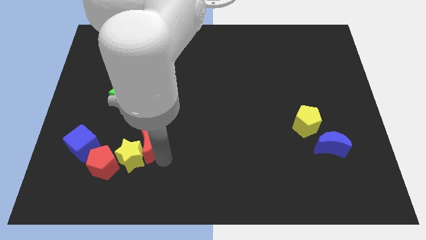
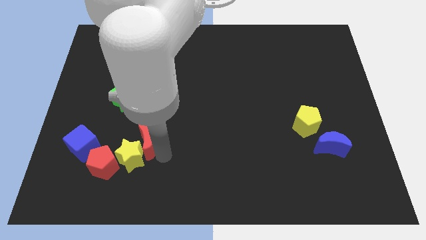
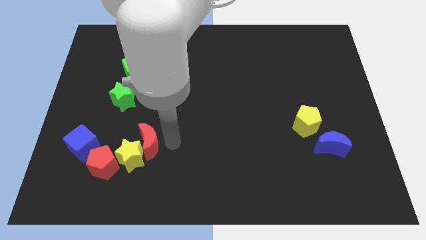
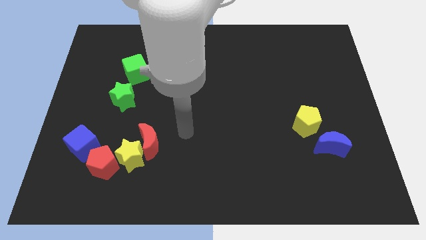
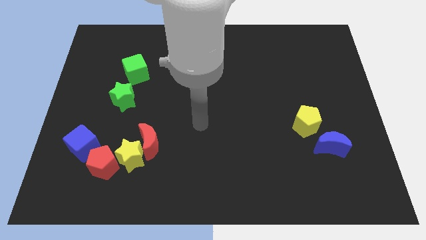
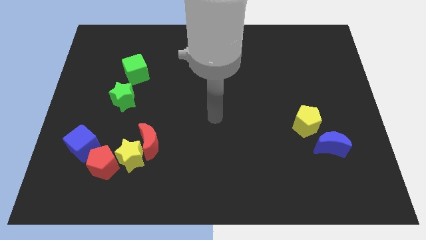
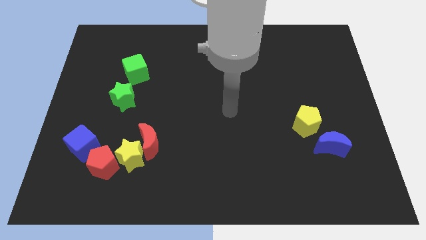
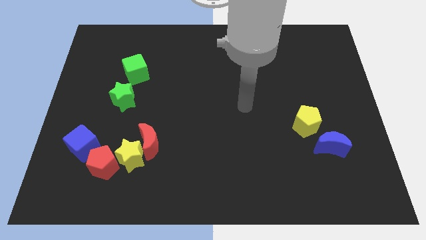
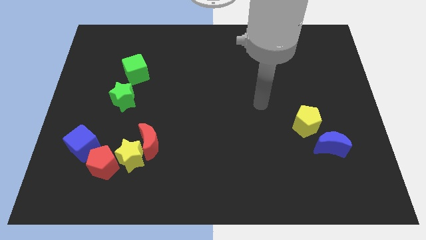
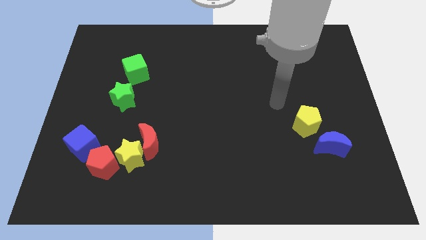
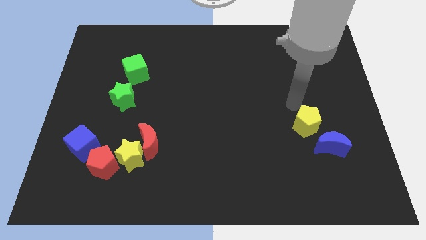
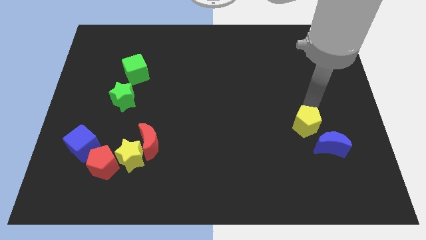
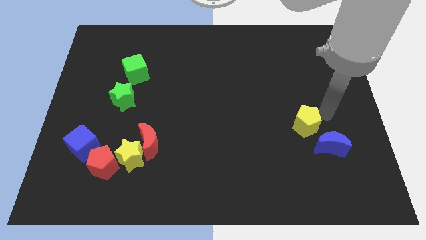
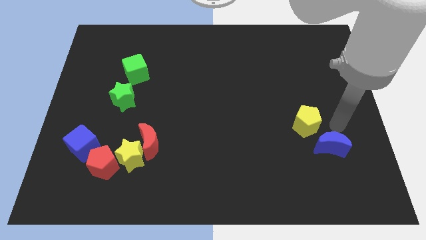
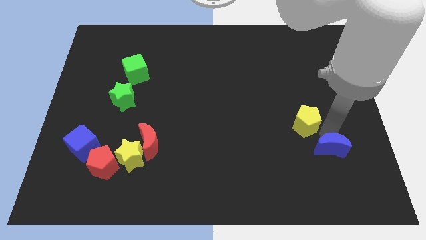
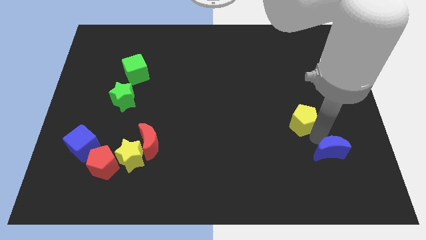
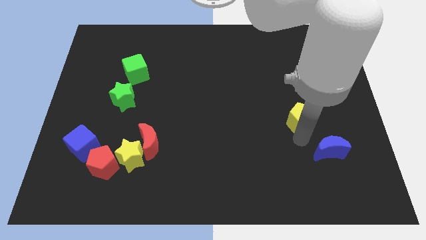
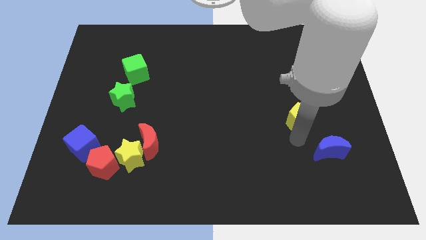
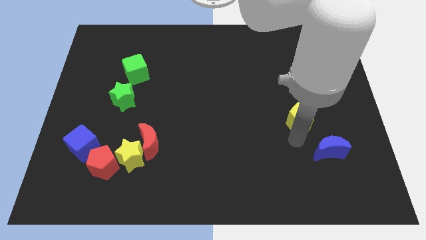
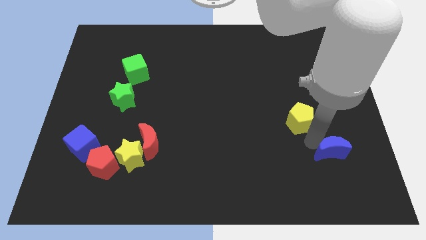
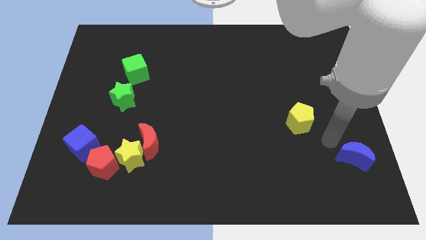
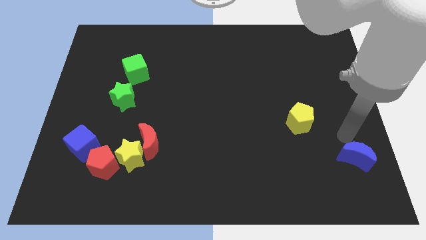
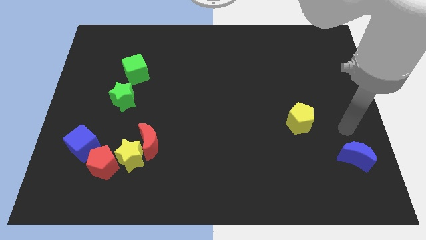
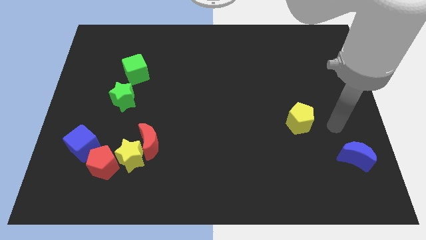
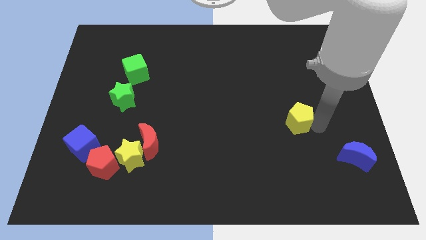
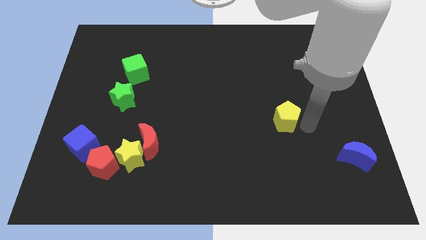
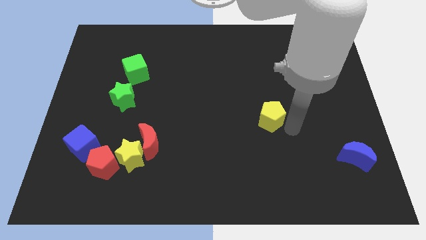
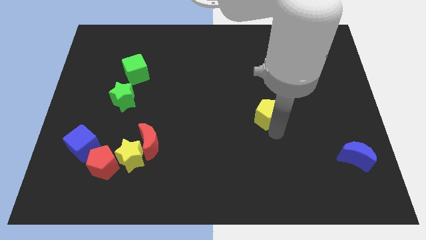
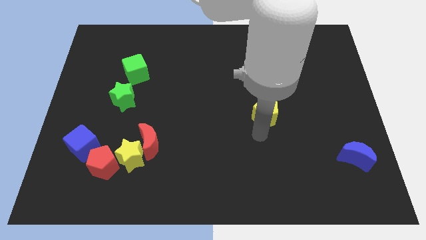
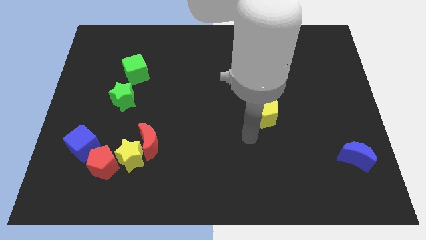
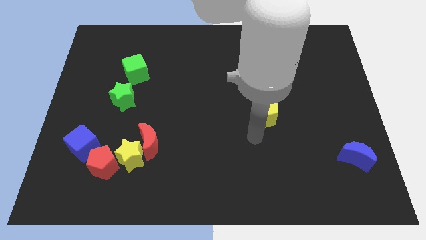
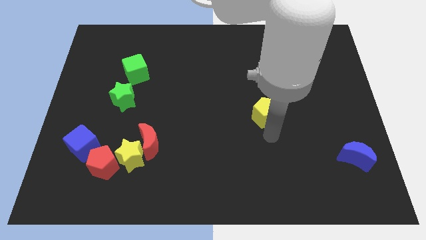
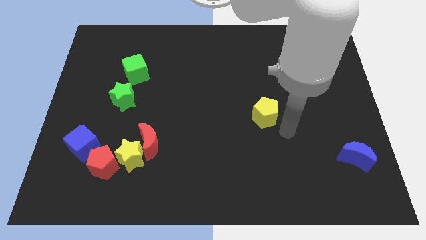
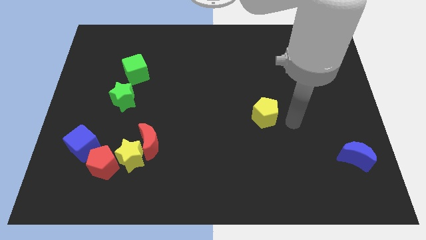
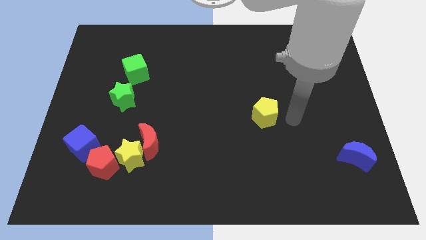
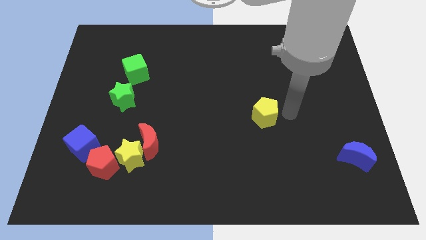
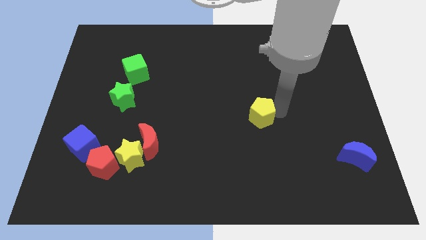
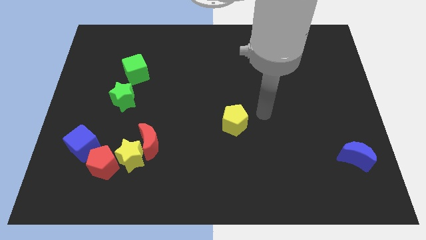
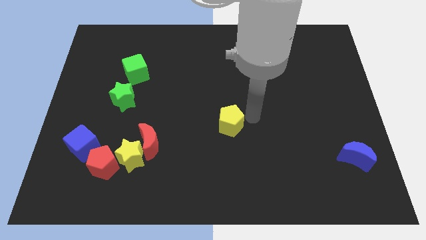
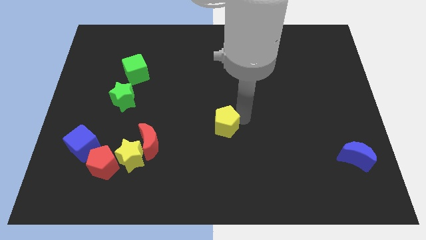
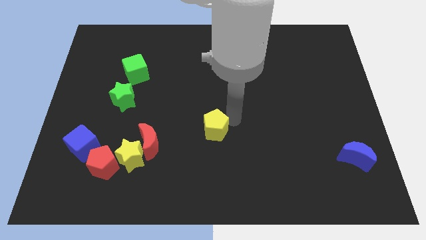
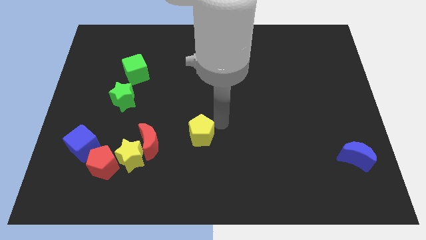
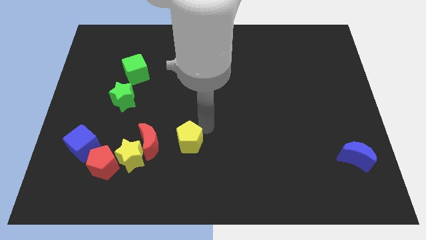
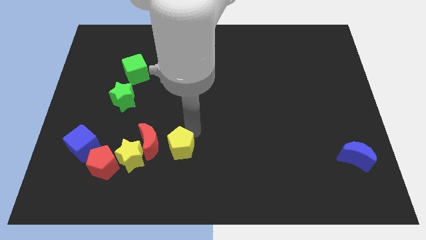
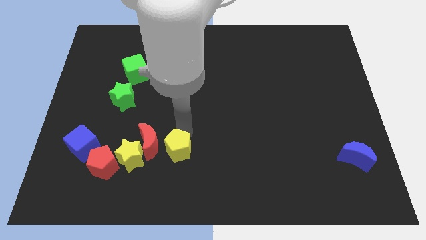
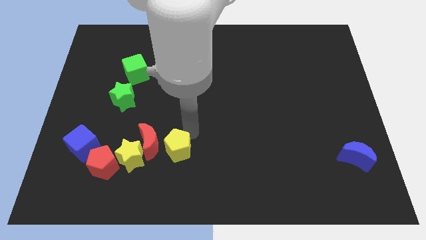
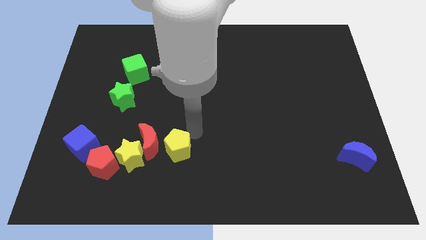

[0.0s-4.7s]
separate the yellow pentagon from the blue crescent

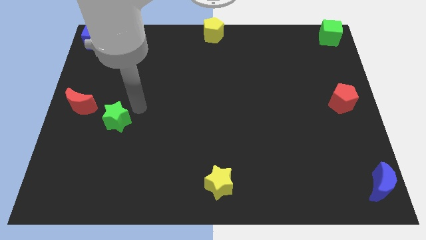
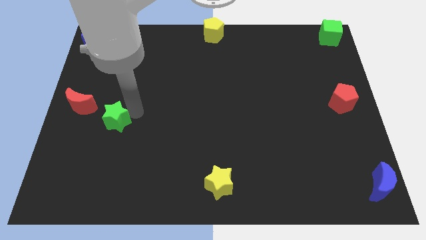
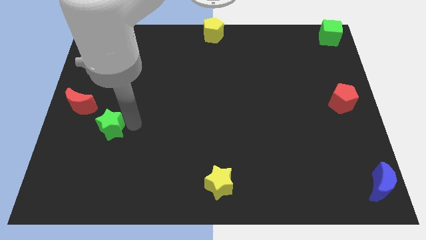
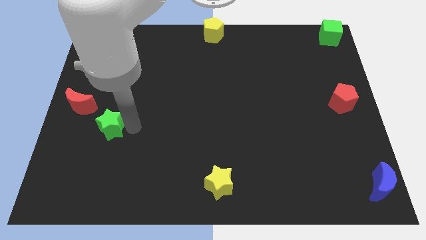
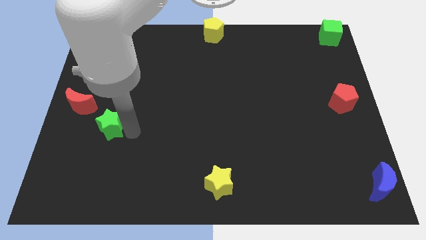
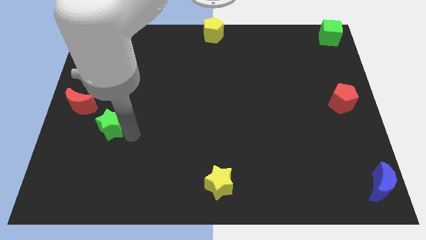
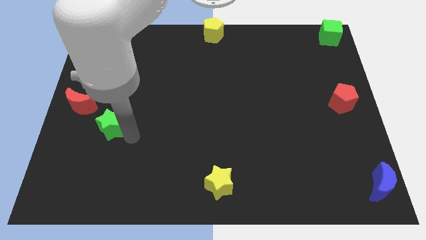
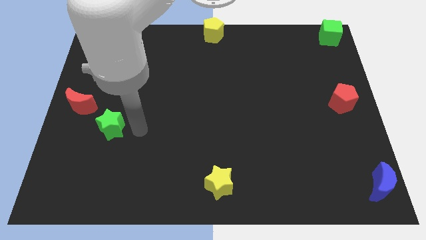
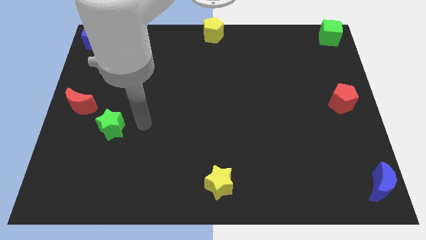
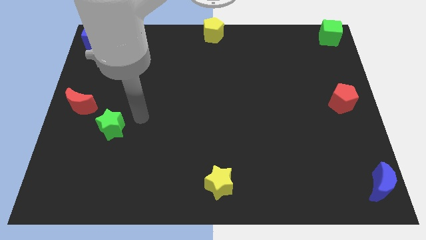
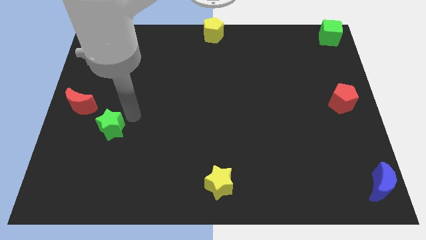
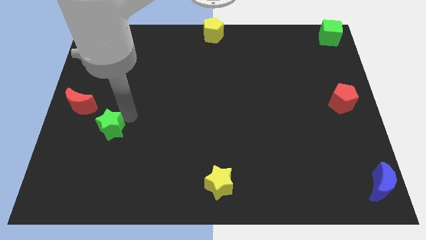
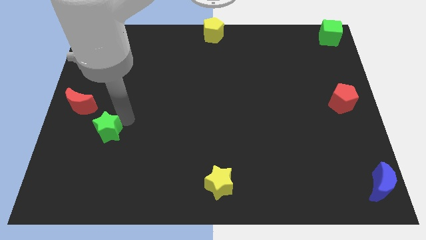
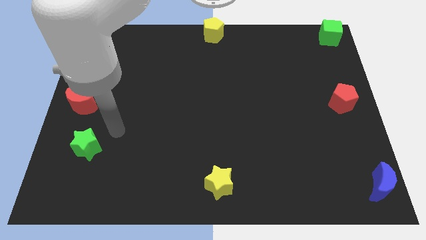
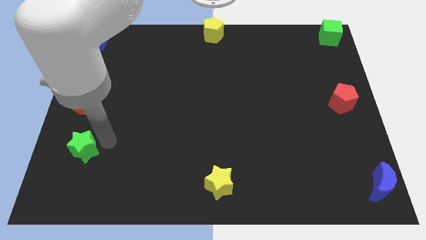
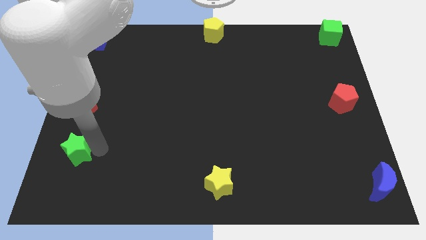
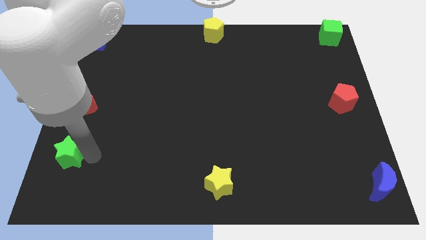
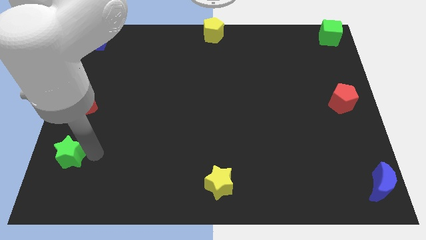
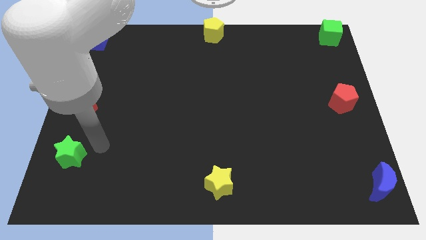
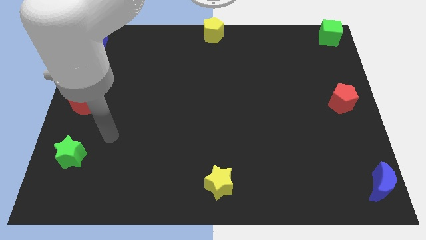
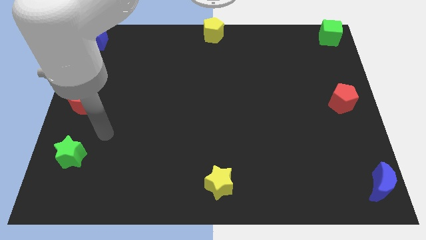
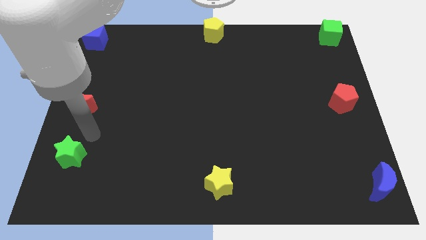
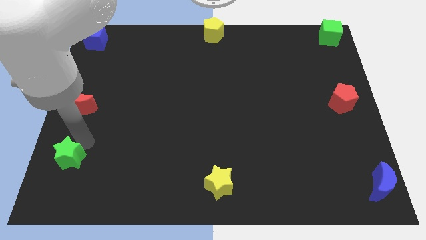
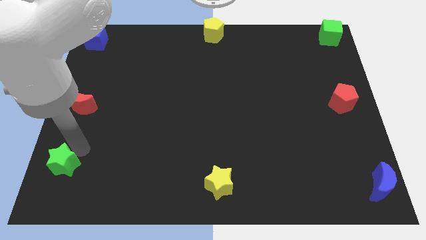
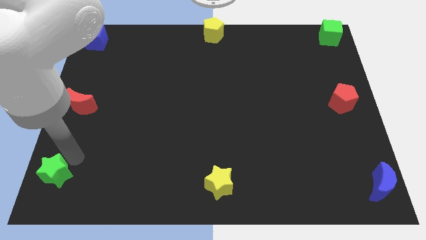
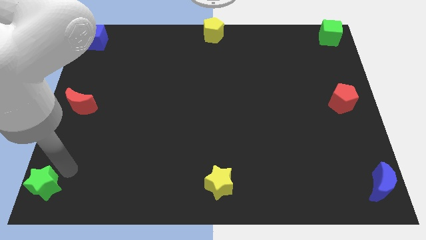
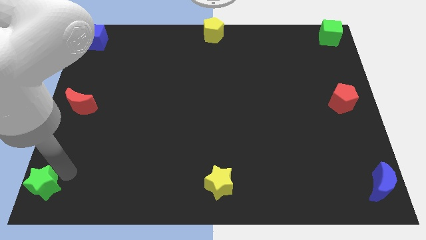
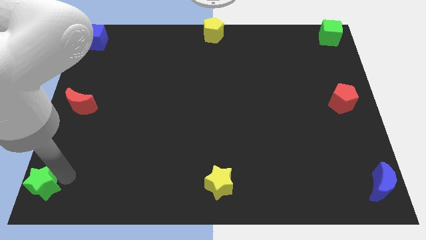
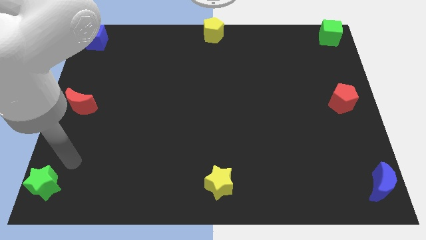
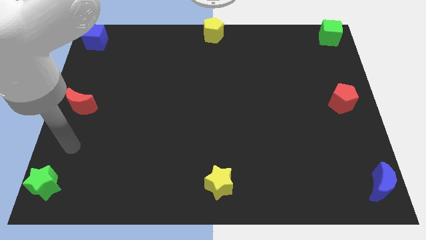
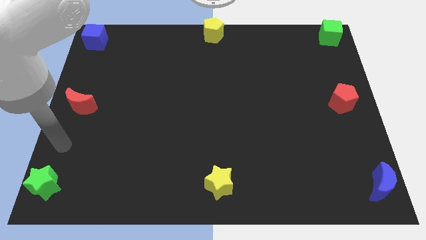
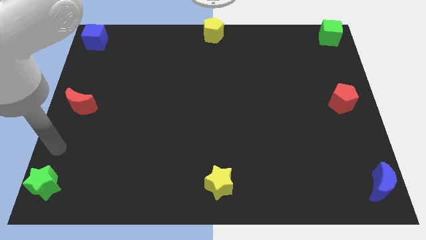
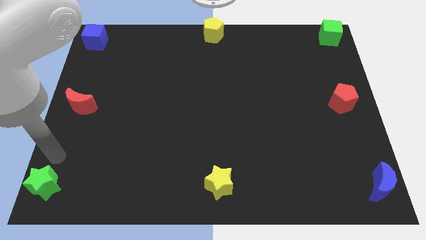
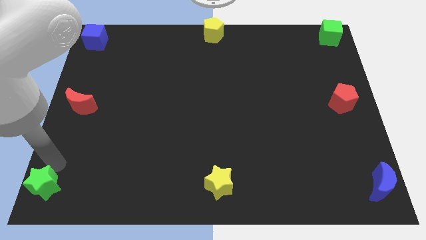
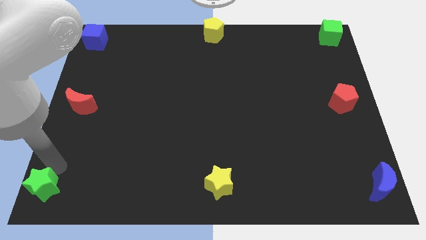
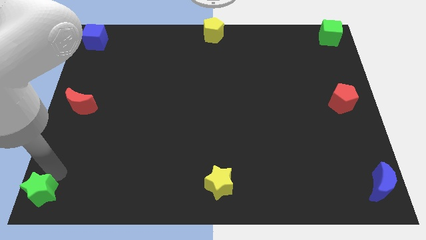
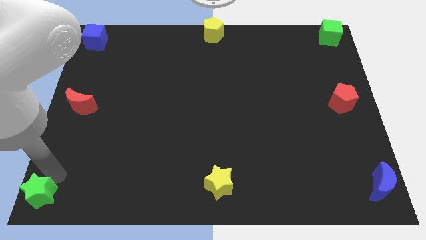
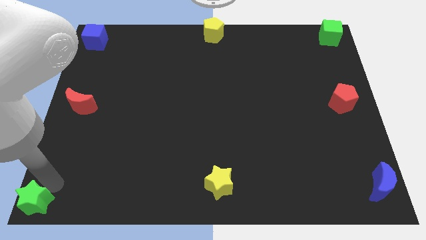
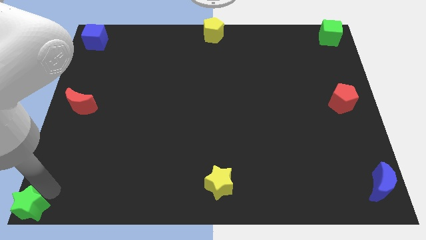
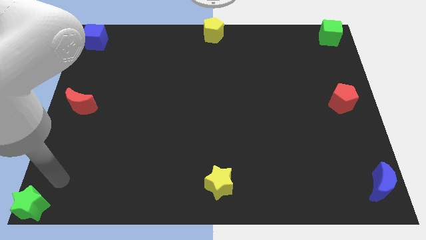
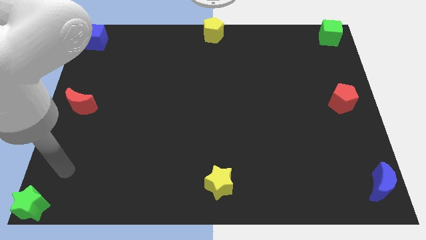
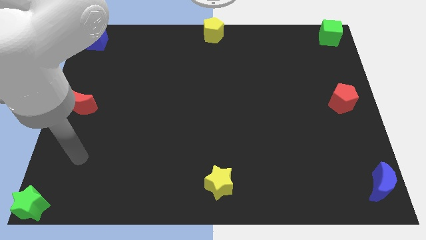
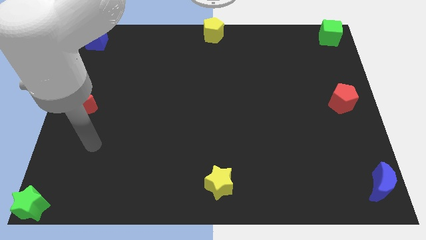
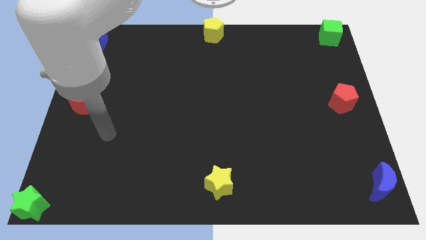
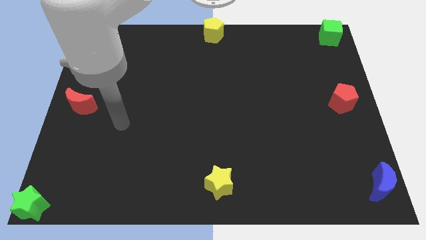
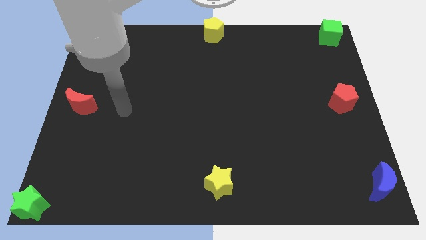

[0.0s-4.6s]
push the green star to the bottom left
